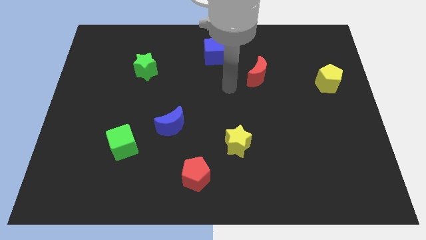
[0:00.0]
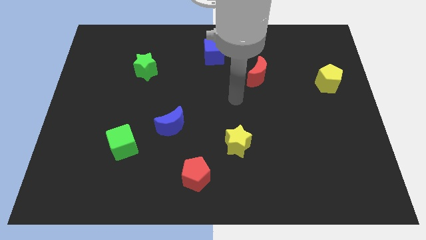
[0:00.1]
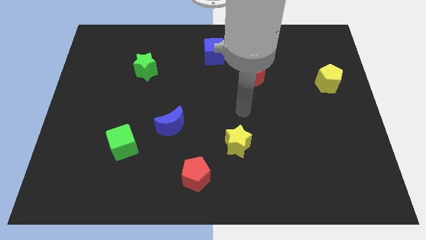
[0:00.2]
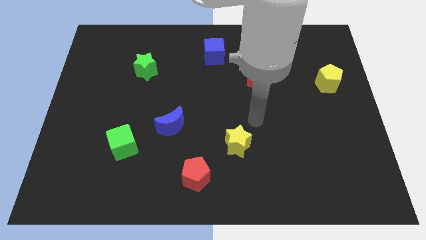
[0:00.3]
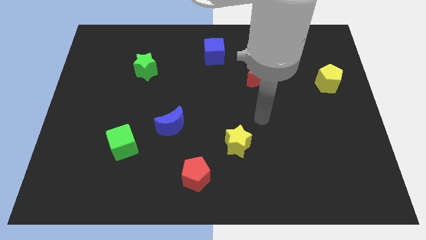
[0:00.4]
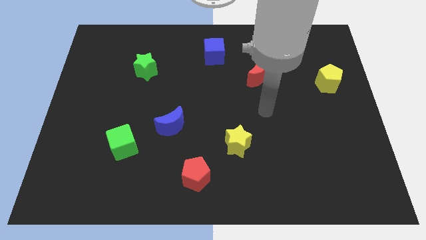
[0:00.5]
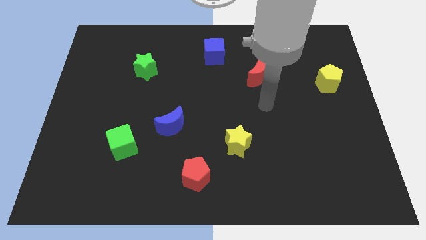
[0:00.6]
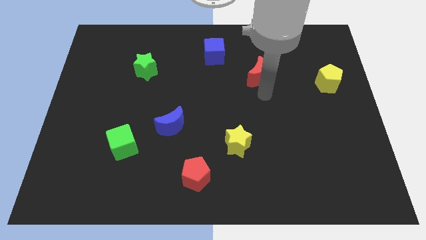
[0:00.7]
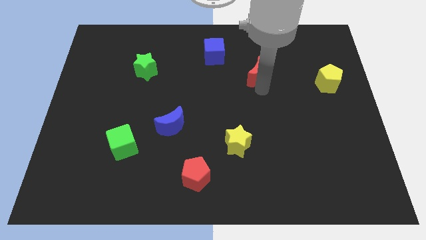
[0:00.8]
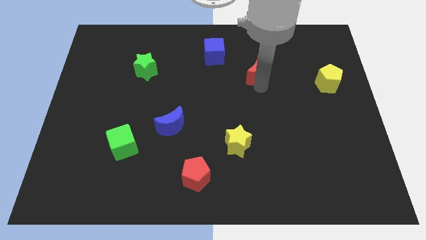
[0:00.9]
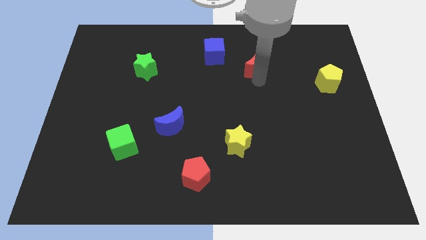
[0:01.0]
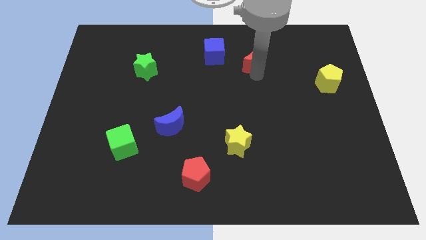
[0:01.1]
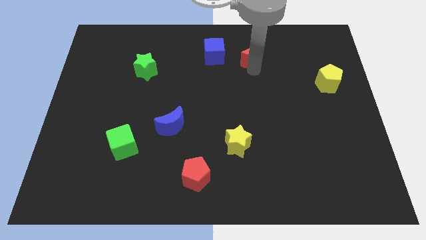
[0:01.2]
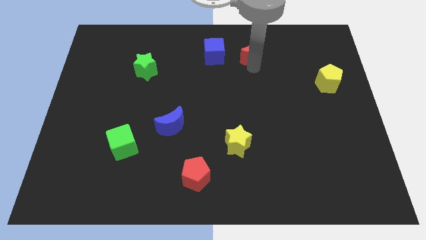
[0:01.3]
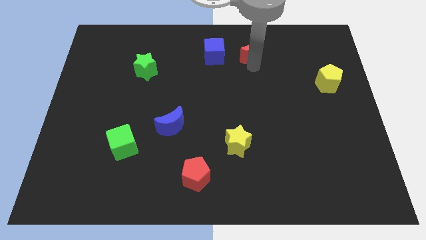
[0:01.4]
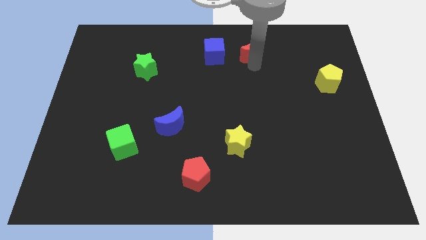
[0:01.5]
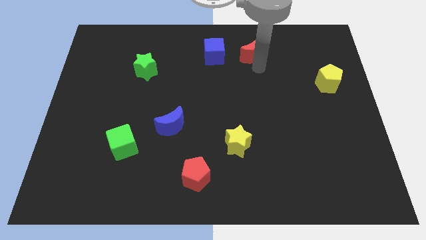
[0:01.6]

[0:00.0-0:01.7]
put the red moon right to the blue cube

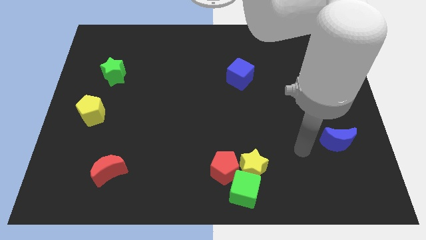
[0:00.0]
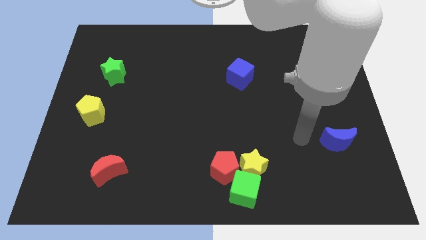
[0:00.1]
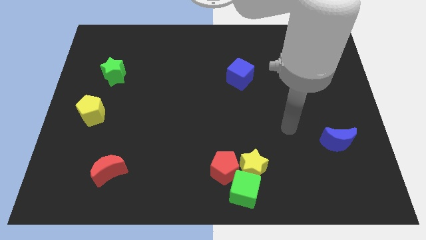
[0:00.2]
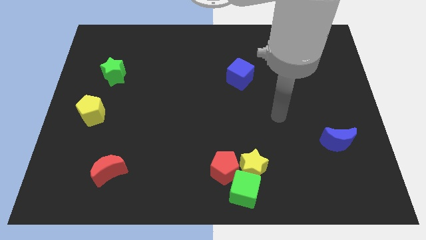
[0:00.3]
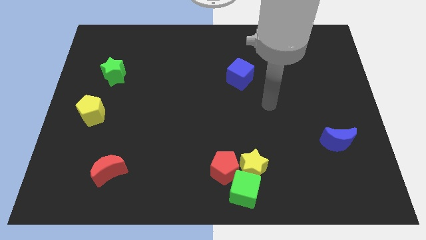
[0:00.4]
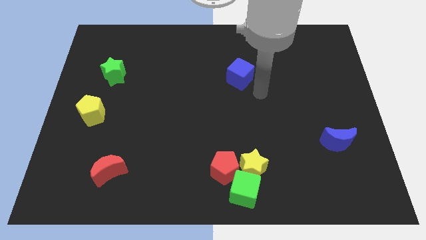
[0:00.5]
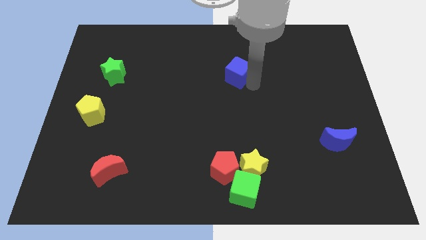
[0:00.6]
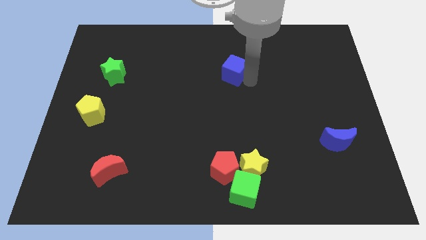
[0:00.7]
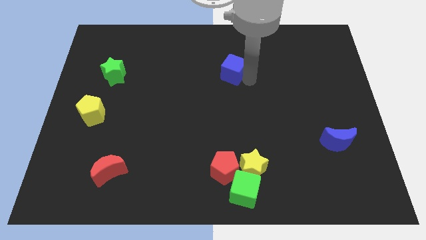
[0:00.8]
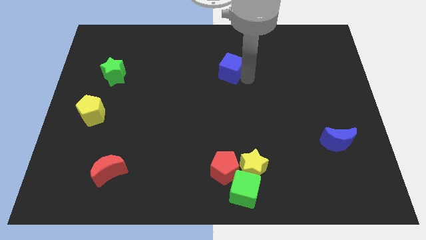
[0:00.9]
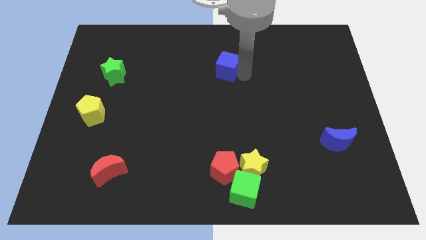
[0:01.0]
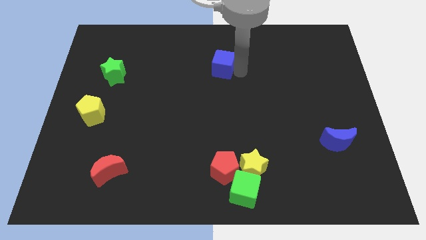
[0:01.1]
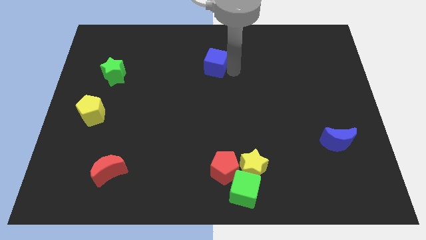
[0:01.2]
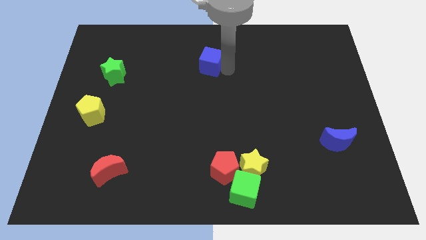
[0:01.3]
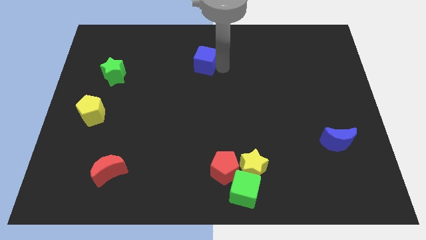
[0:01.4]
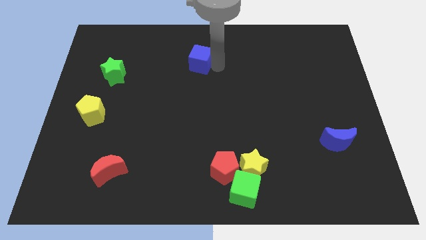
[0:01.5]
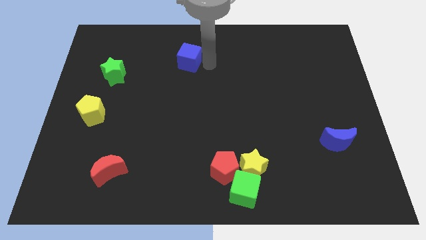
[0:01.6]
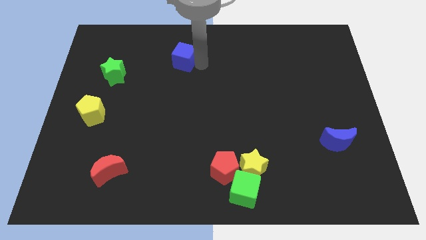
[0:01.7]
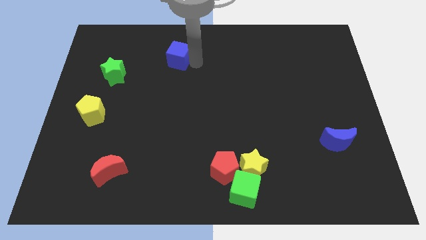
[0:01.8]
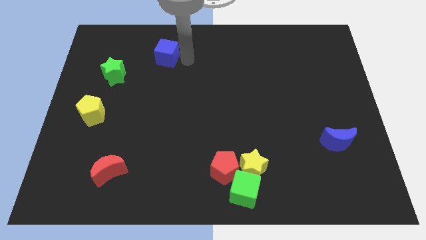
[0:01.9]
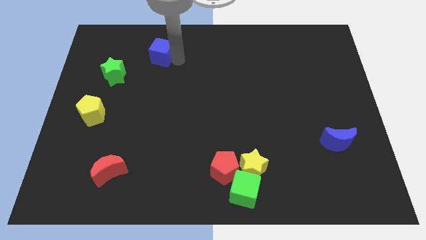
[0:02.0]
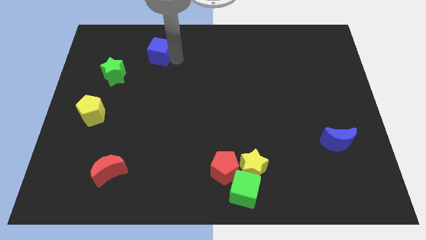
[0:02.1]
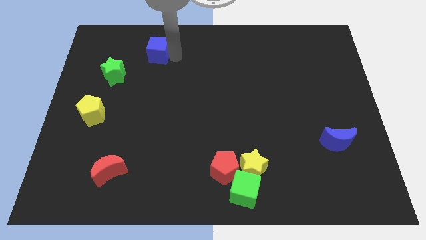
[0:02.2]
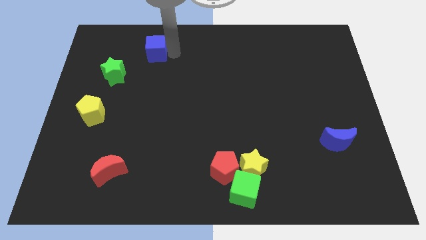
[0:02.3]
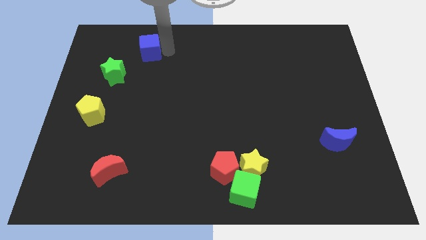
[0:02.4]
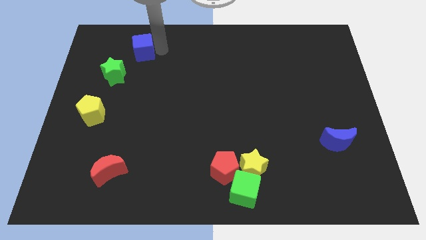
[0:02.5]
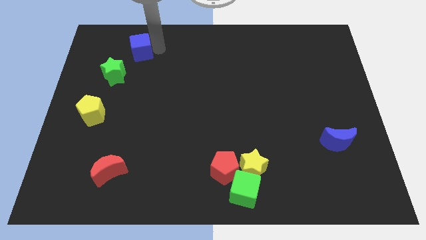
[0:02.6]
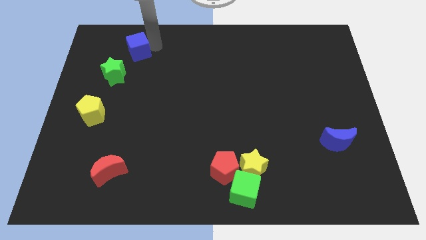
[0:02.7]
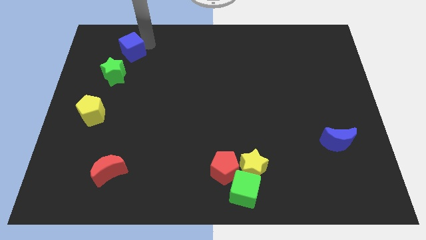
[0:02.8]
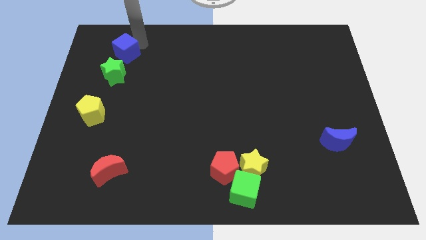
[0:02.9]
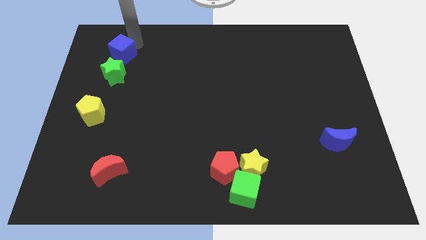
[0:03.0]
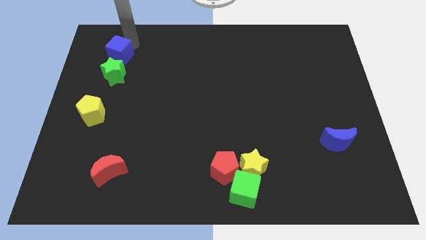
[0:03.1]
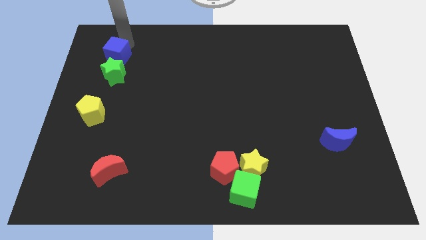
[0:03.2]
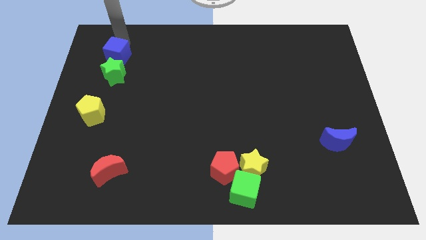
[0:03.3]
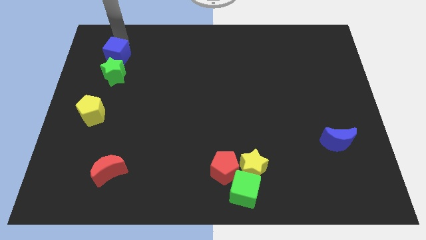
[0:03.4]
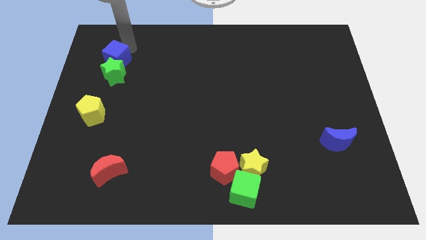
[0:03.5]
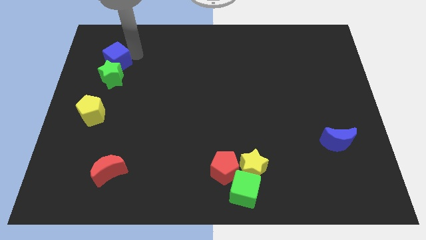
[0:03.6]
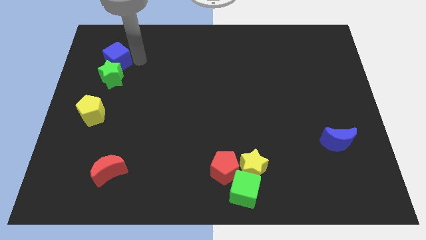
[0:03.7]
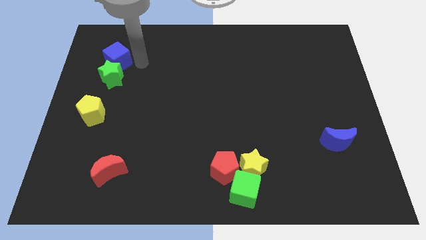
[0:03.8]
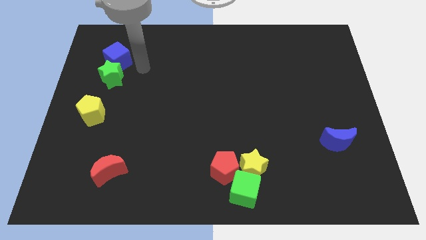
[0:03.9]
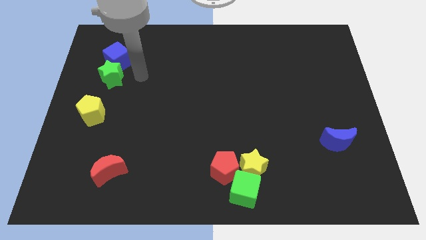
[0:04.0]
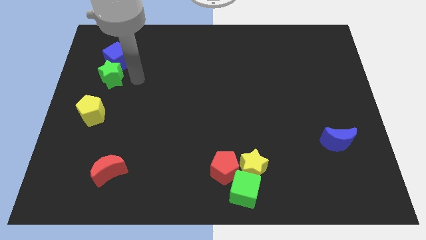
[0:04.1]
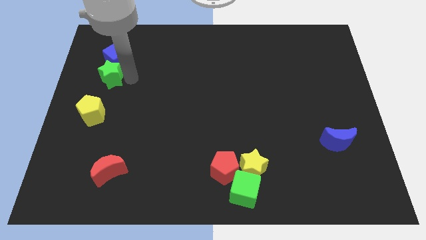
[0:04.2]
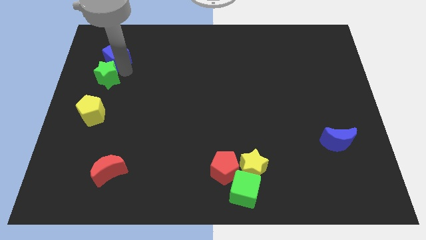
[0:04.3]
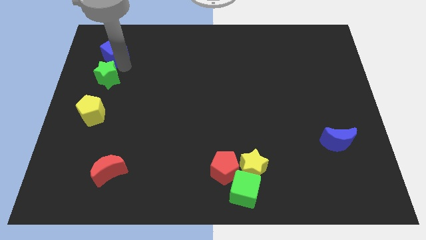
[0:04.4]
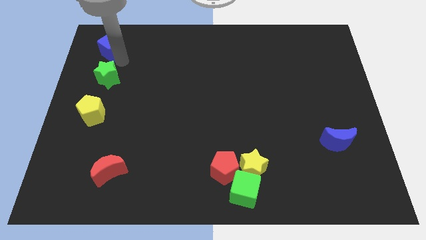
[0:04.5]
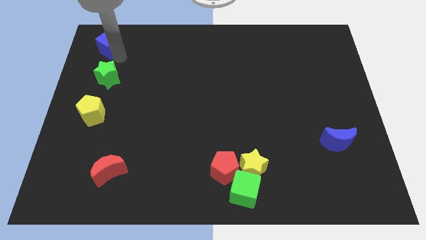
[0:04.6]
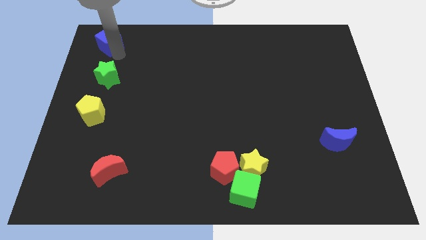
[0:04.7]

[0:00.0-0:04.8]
place the blue cube to the top of green star

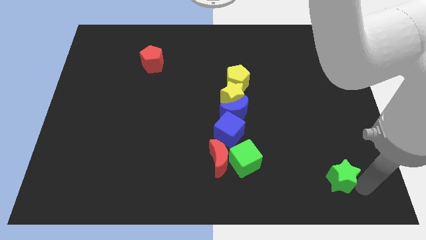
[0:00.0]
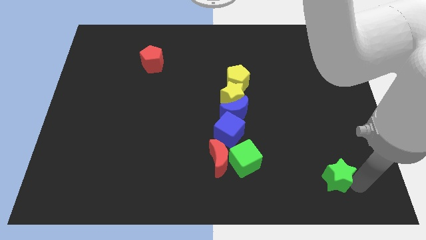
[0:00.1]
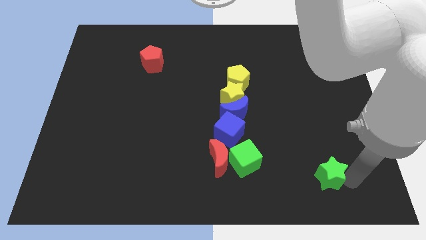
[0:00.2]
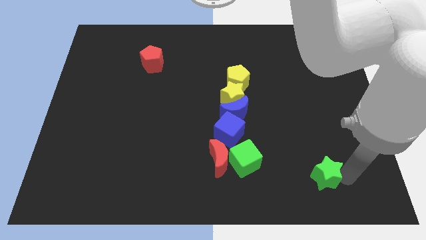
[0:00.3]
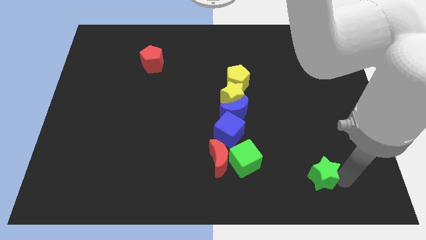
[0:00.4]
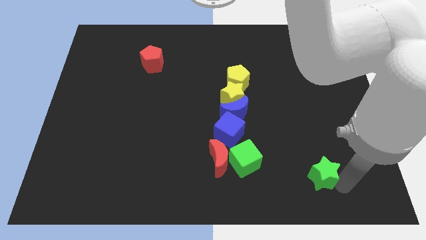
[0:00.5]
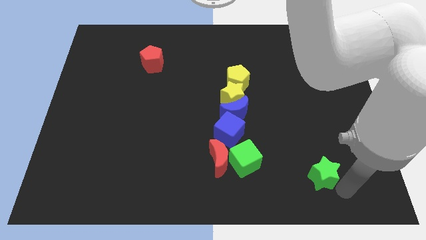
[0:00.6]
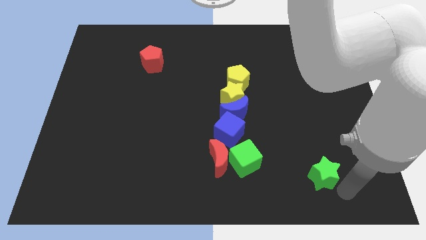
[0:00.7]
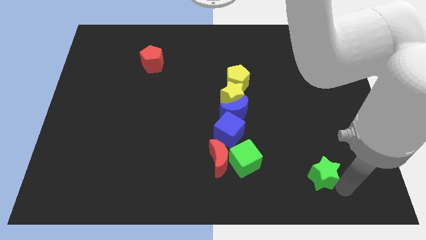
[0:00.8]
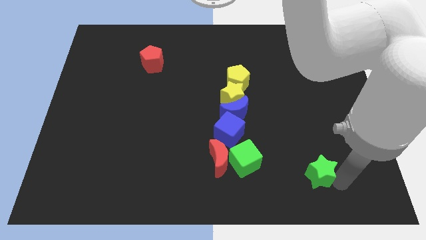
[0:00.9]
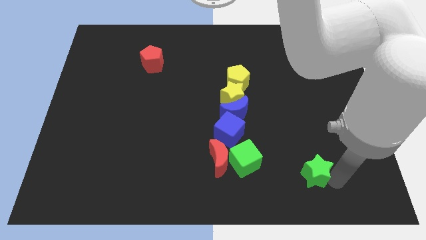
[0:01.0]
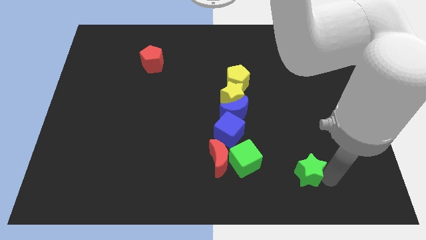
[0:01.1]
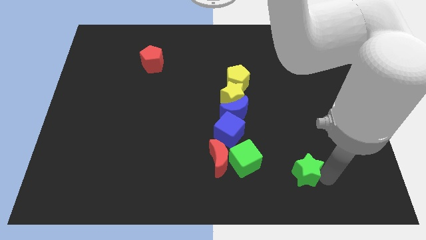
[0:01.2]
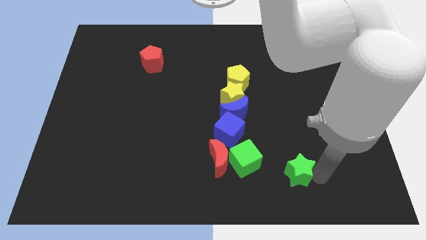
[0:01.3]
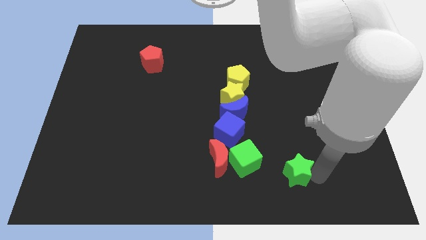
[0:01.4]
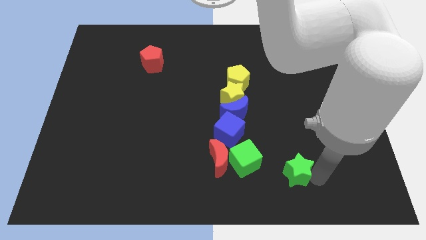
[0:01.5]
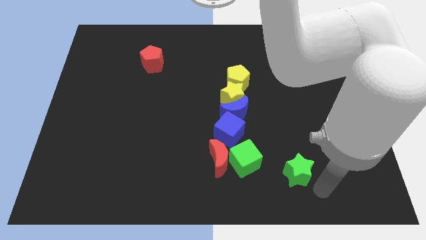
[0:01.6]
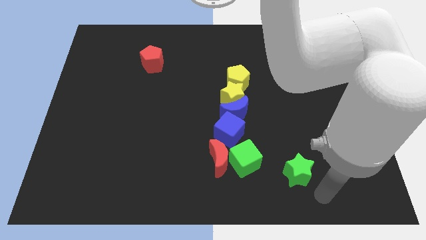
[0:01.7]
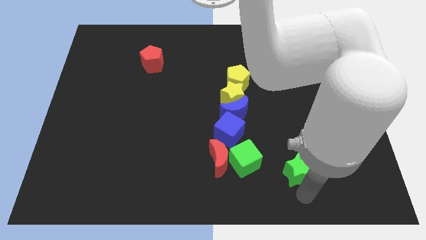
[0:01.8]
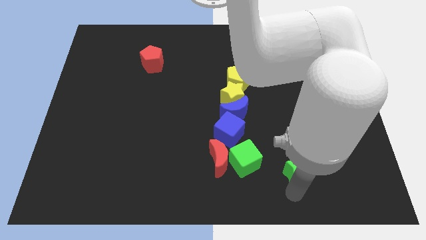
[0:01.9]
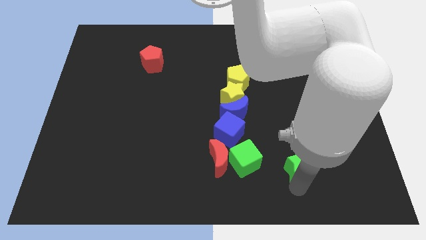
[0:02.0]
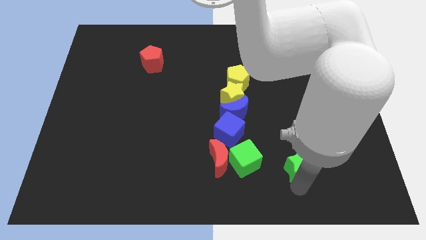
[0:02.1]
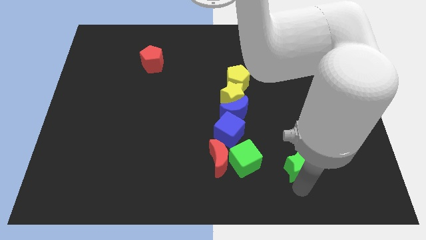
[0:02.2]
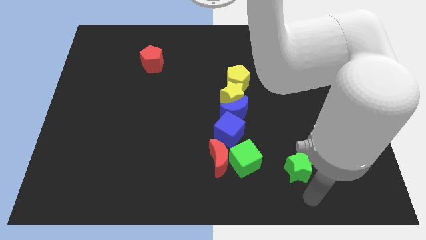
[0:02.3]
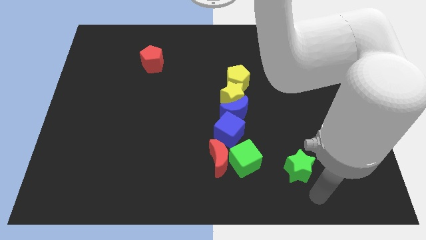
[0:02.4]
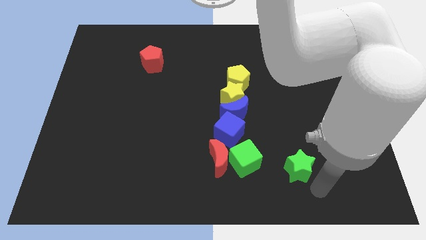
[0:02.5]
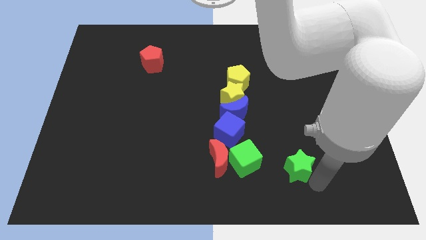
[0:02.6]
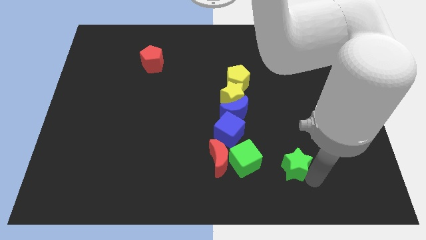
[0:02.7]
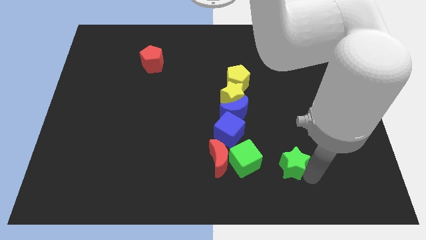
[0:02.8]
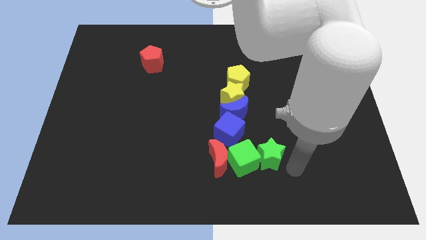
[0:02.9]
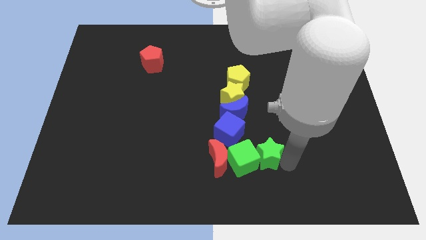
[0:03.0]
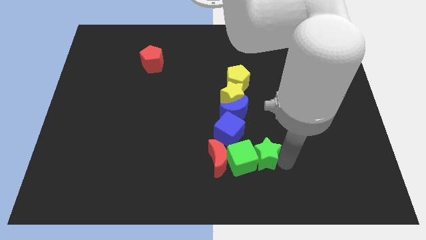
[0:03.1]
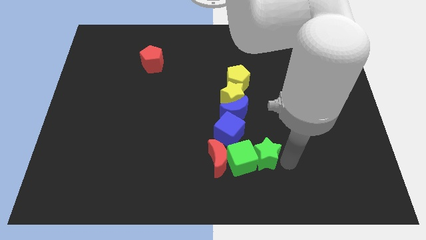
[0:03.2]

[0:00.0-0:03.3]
place the green star into the green cube to the right
